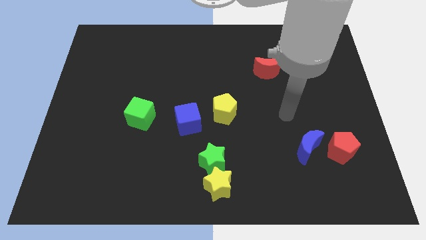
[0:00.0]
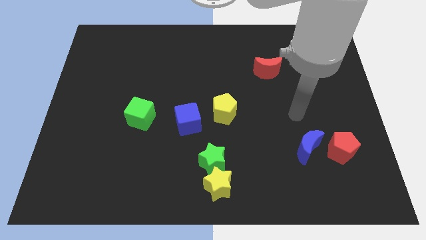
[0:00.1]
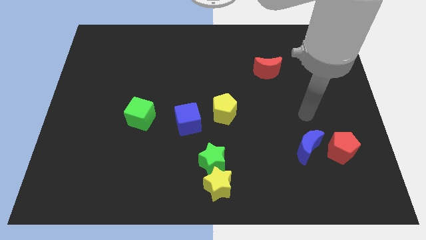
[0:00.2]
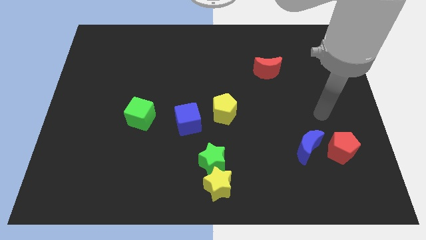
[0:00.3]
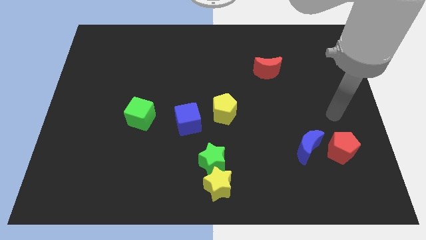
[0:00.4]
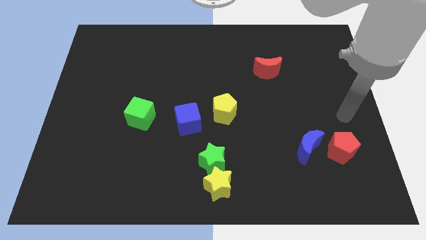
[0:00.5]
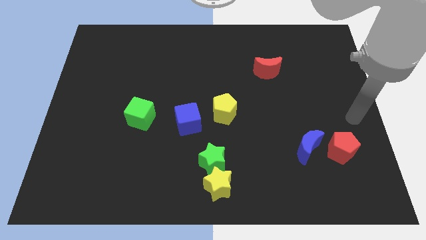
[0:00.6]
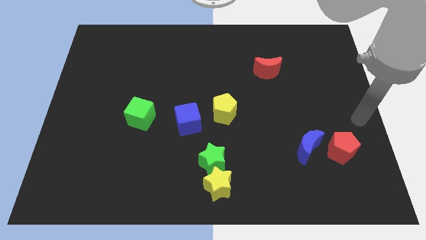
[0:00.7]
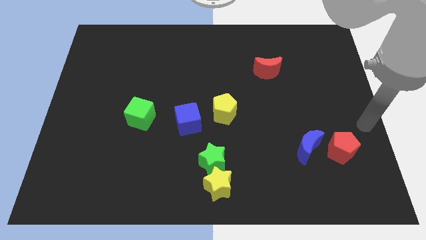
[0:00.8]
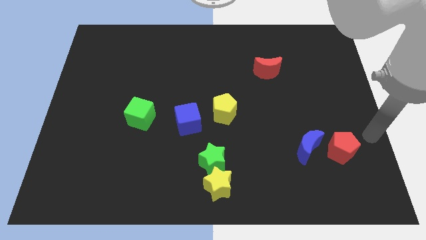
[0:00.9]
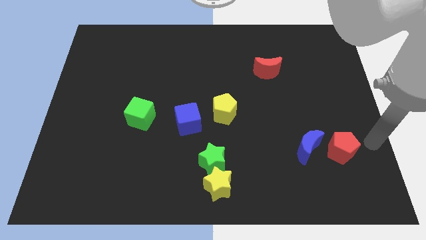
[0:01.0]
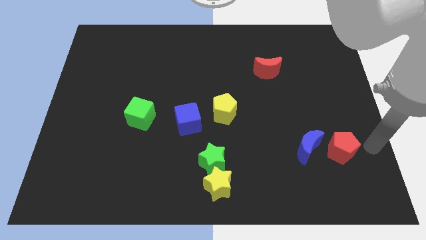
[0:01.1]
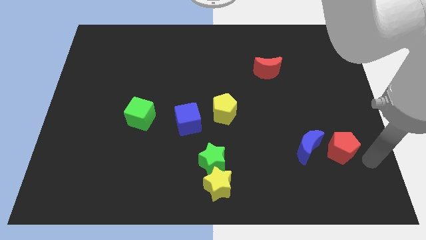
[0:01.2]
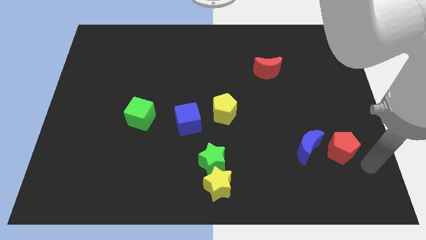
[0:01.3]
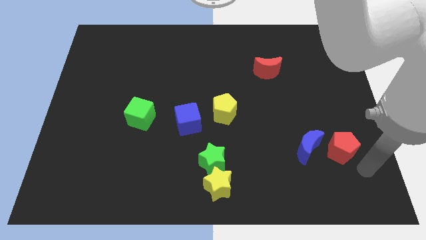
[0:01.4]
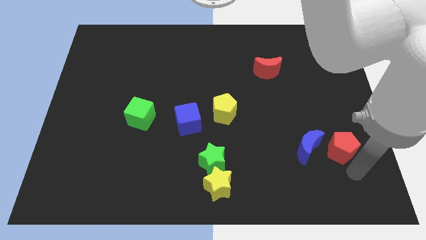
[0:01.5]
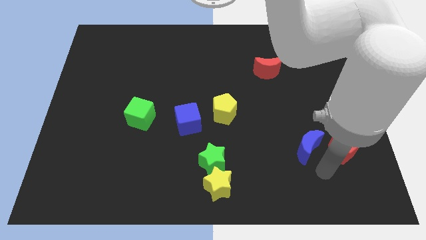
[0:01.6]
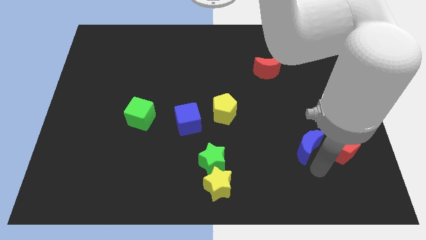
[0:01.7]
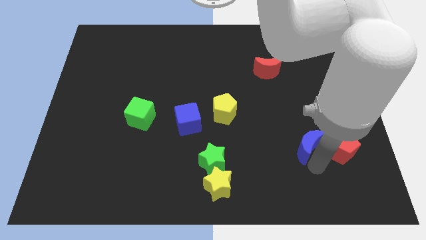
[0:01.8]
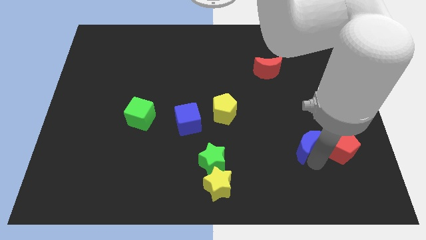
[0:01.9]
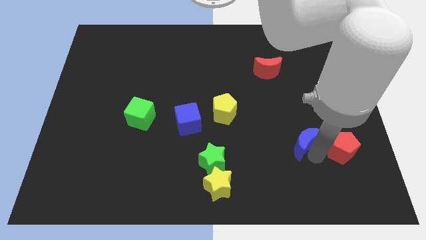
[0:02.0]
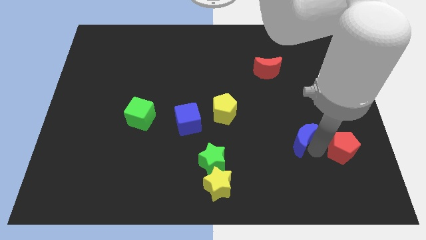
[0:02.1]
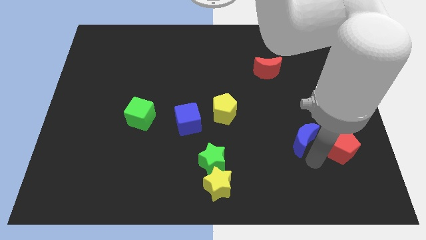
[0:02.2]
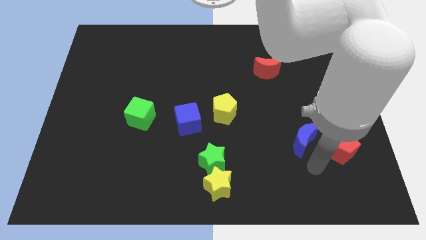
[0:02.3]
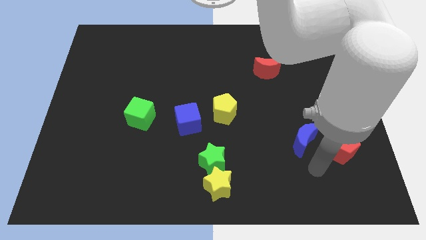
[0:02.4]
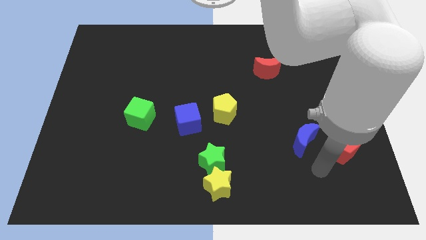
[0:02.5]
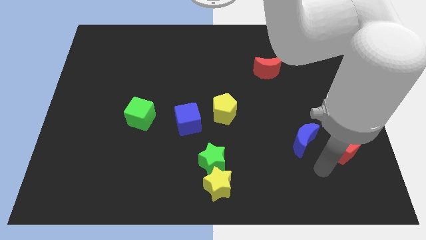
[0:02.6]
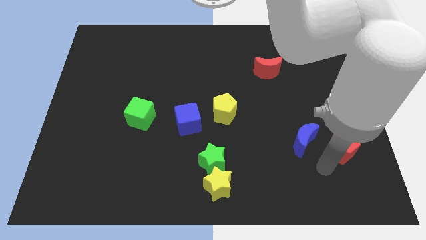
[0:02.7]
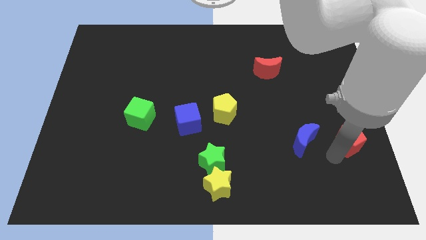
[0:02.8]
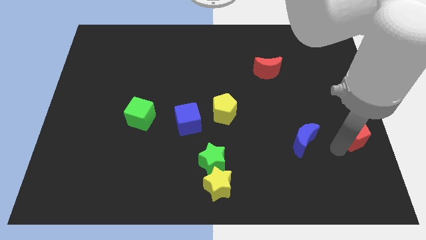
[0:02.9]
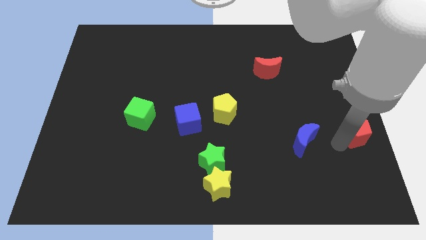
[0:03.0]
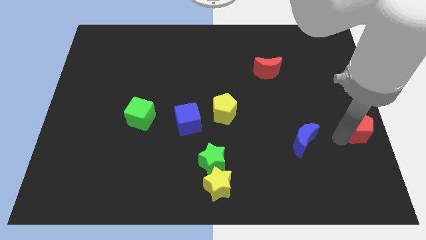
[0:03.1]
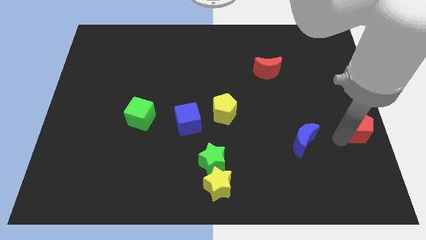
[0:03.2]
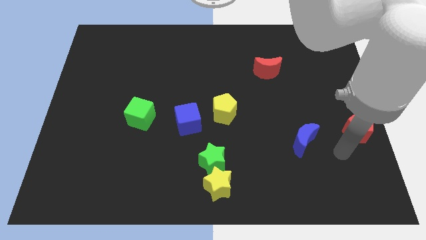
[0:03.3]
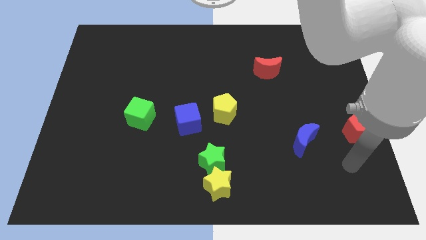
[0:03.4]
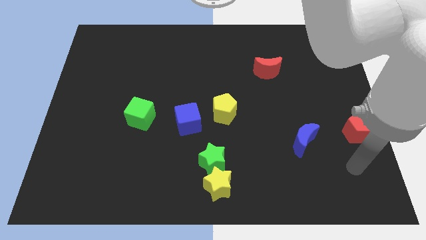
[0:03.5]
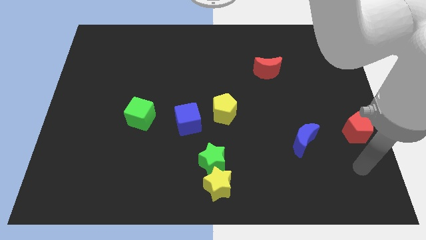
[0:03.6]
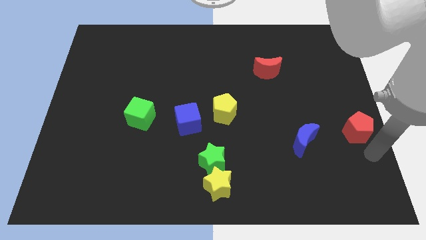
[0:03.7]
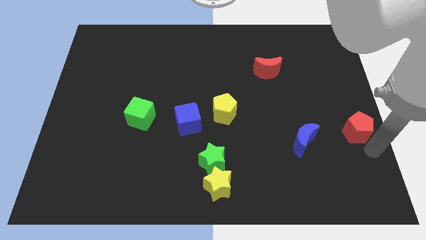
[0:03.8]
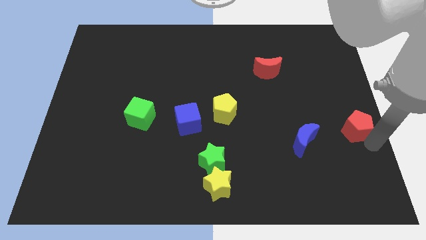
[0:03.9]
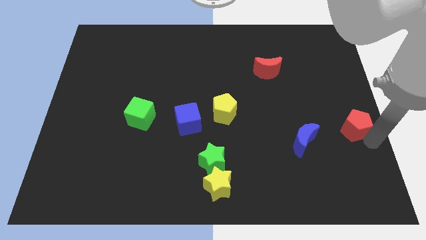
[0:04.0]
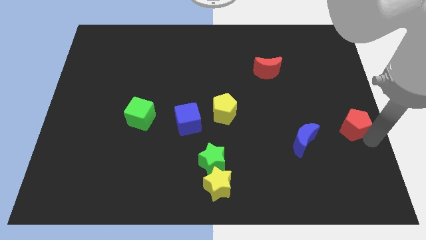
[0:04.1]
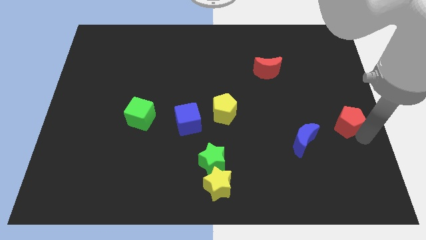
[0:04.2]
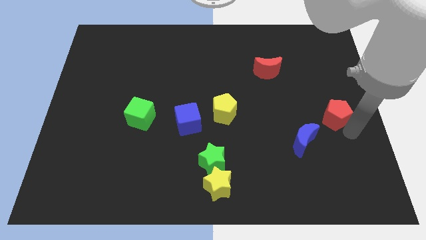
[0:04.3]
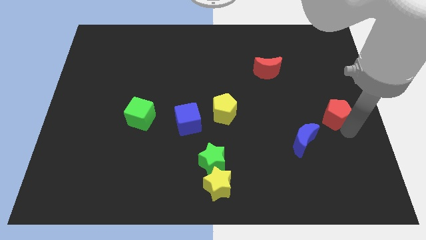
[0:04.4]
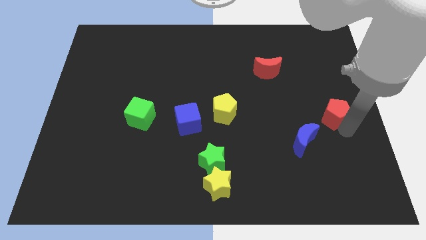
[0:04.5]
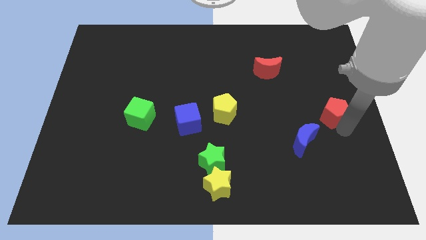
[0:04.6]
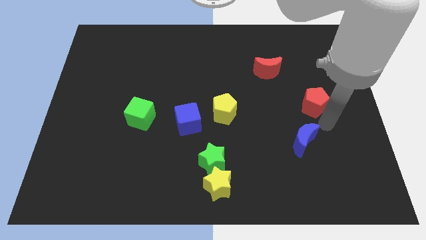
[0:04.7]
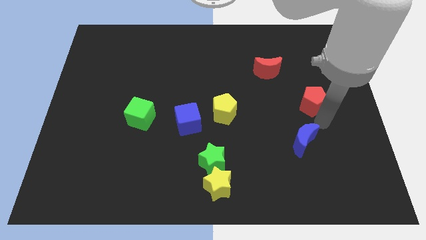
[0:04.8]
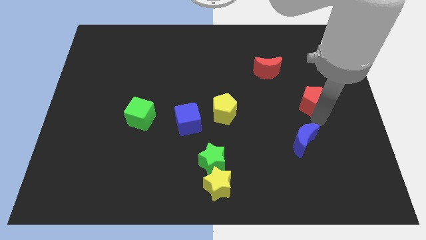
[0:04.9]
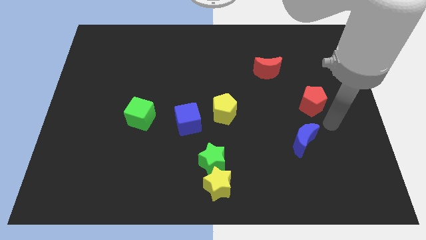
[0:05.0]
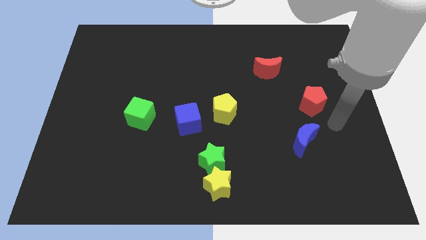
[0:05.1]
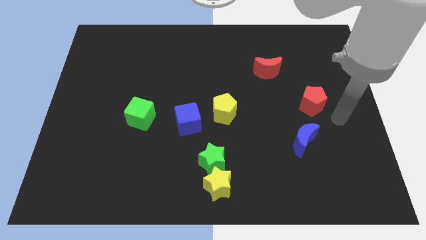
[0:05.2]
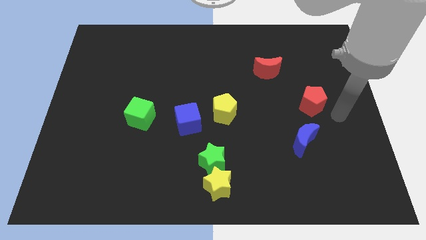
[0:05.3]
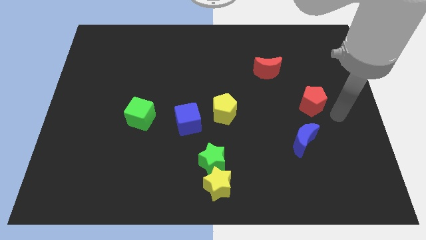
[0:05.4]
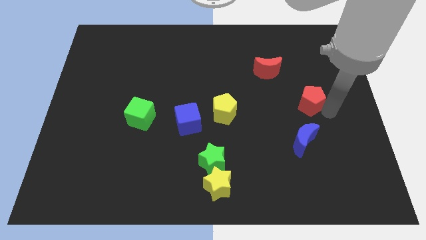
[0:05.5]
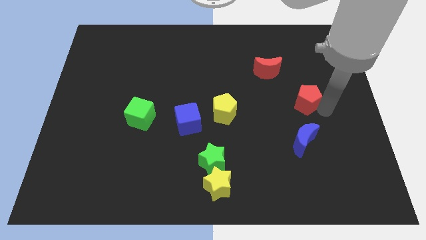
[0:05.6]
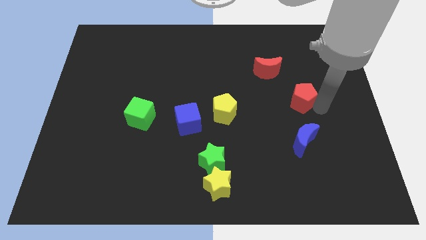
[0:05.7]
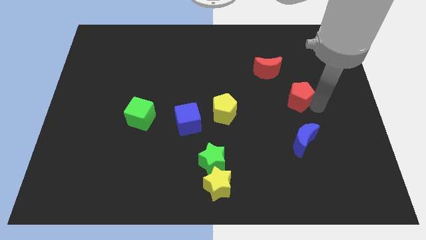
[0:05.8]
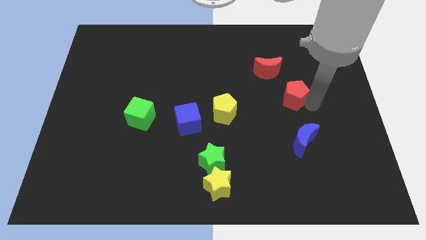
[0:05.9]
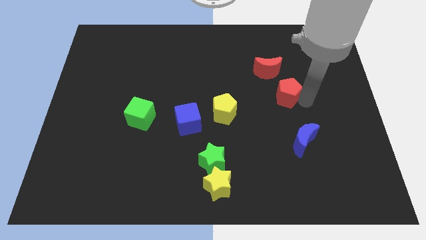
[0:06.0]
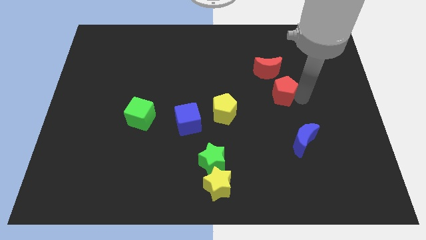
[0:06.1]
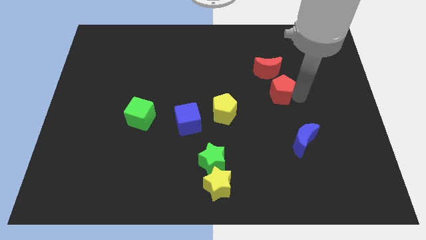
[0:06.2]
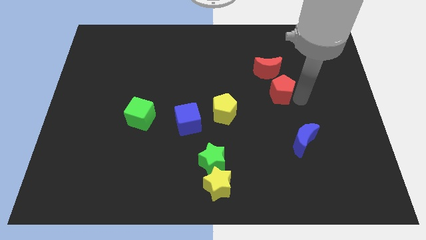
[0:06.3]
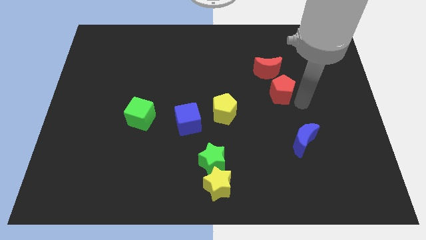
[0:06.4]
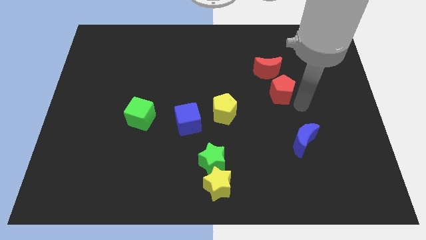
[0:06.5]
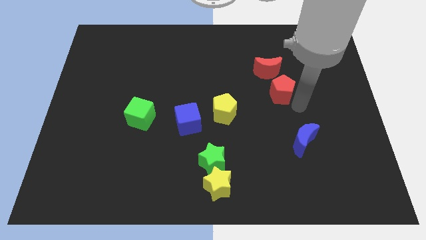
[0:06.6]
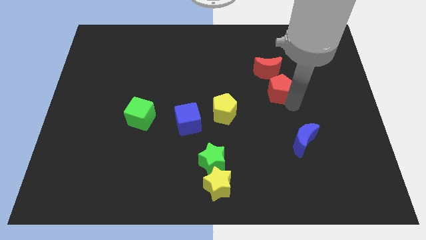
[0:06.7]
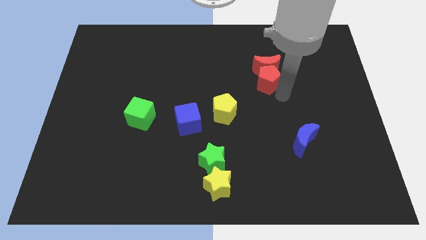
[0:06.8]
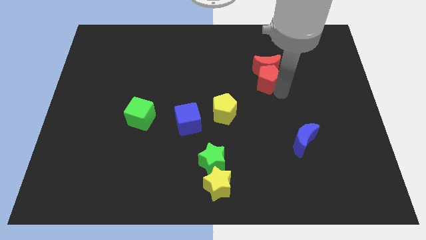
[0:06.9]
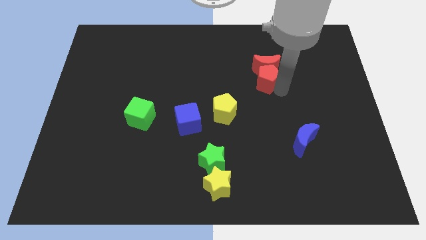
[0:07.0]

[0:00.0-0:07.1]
move the red pentagon close to the red moon

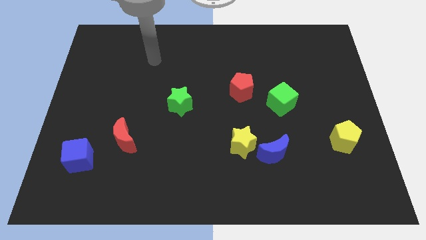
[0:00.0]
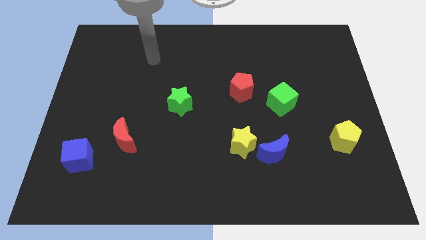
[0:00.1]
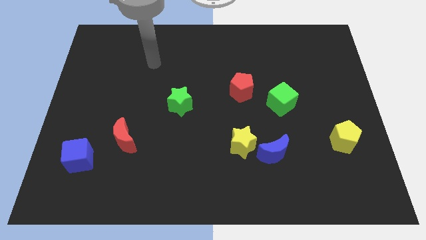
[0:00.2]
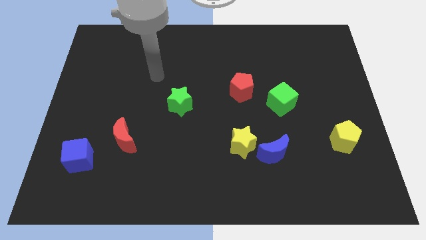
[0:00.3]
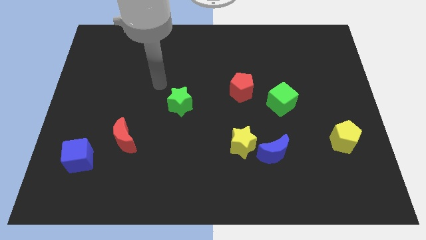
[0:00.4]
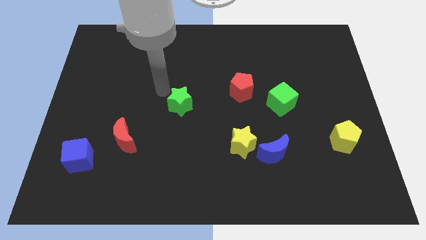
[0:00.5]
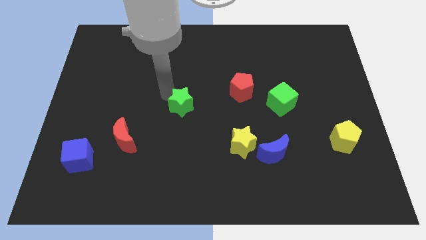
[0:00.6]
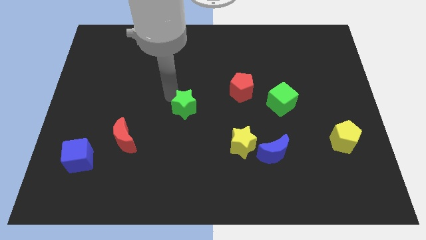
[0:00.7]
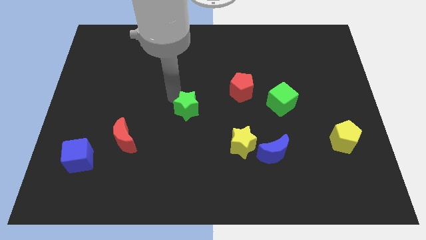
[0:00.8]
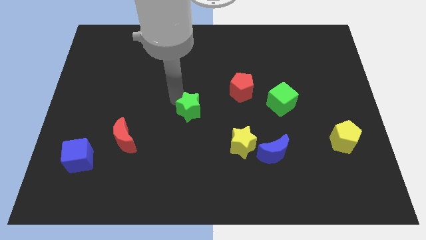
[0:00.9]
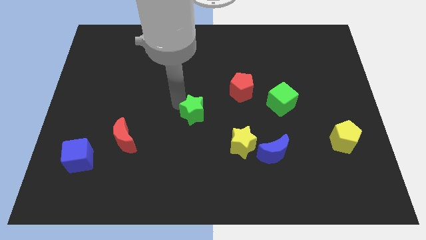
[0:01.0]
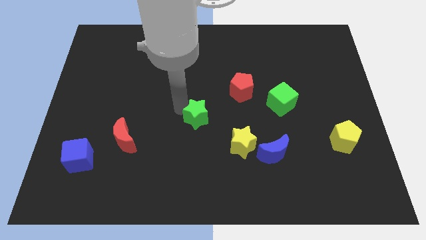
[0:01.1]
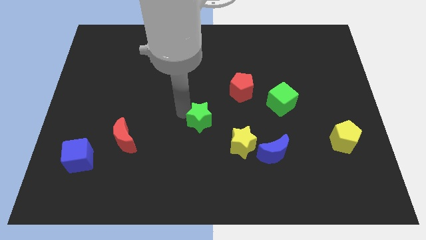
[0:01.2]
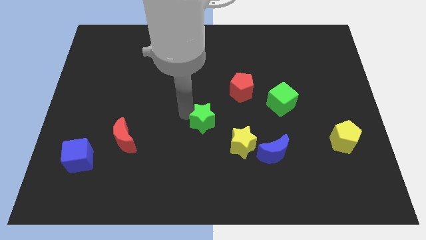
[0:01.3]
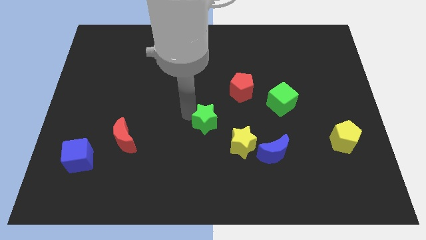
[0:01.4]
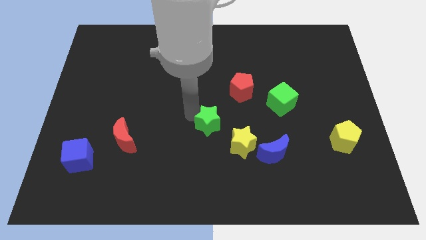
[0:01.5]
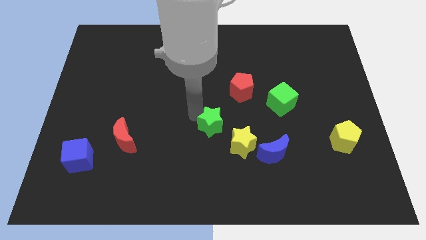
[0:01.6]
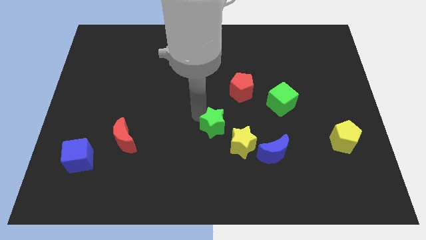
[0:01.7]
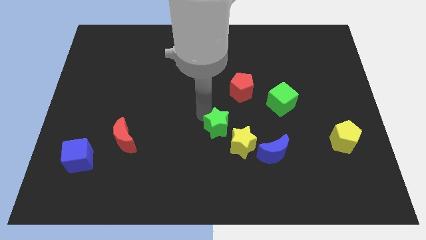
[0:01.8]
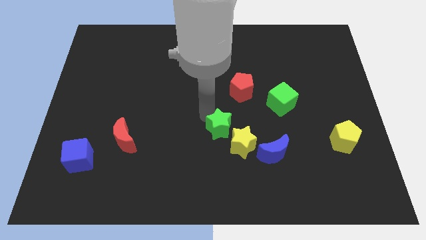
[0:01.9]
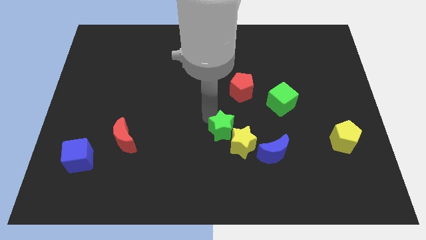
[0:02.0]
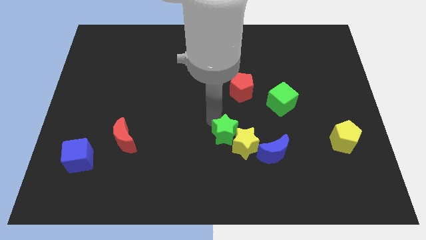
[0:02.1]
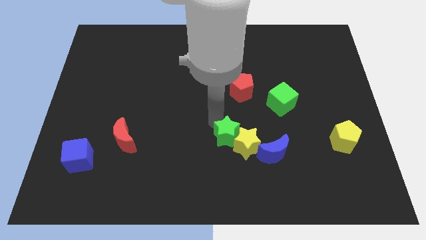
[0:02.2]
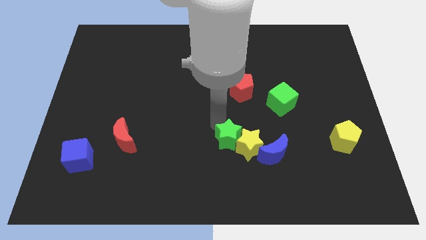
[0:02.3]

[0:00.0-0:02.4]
put the green star close to the yellow star
